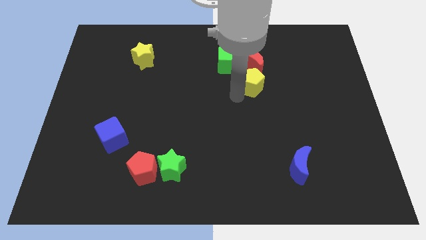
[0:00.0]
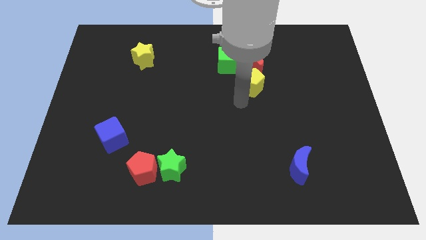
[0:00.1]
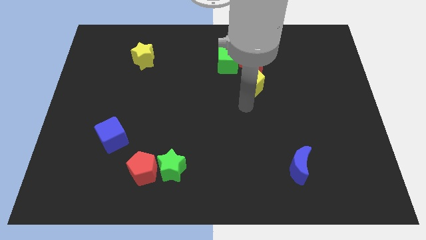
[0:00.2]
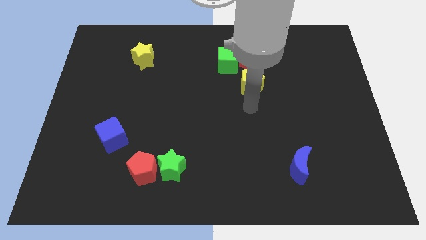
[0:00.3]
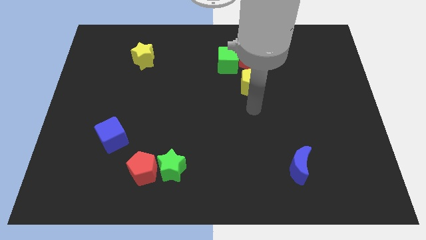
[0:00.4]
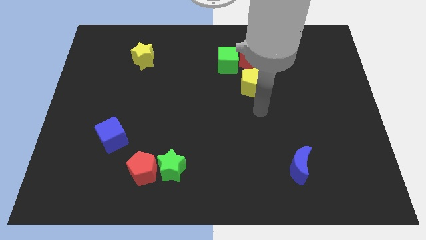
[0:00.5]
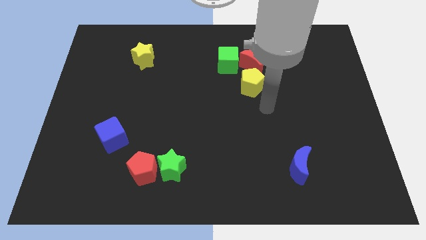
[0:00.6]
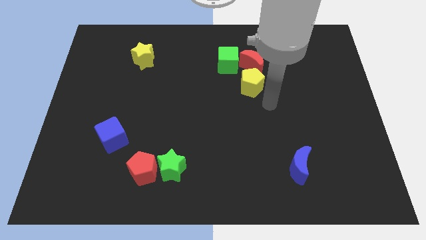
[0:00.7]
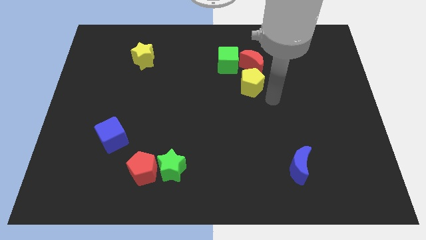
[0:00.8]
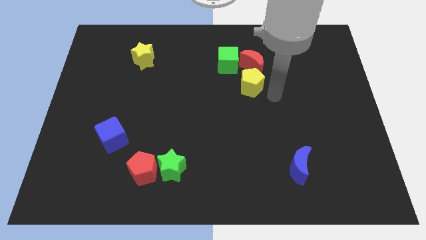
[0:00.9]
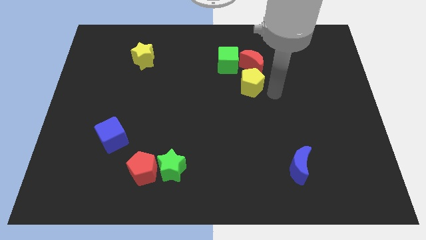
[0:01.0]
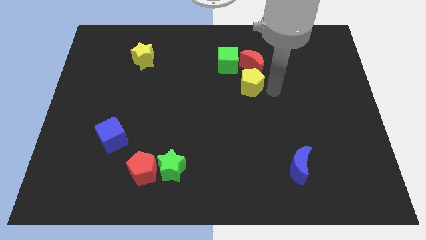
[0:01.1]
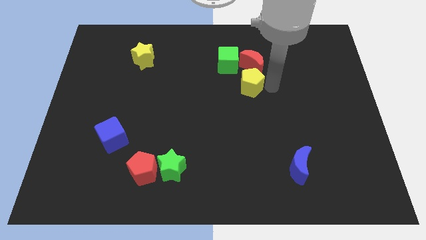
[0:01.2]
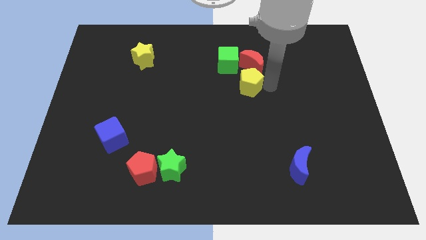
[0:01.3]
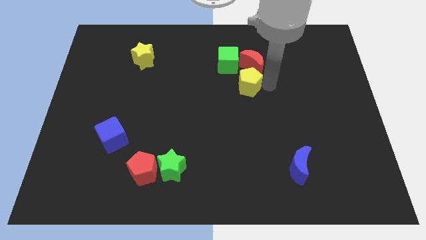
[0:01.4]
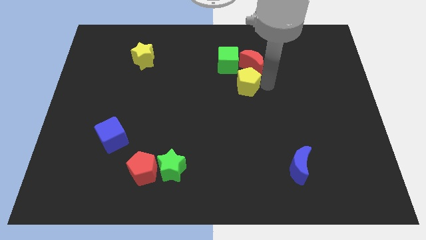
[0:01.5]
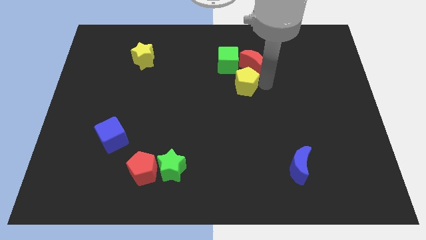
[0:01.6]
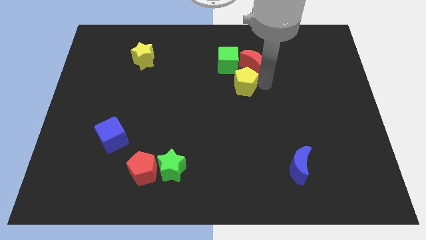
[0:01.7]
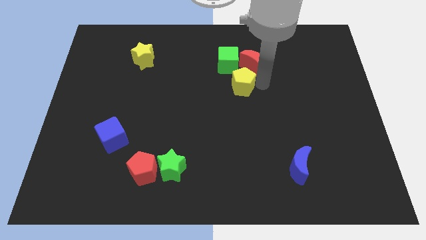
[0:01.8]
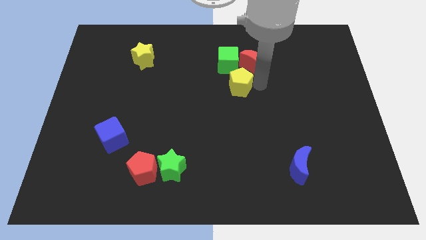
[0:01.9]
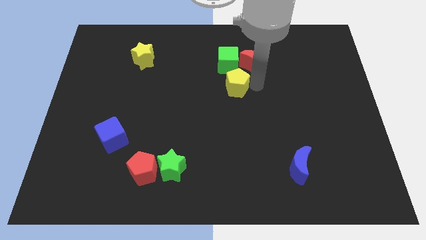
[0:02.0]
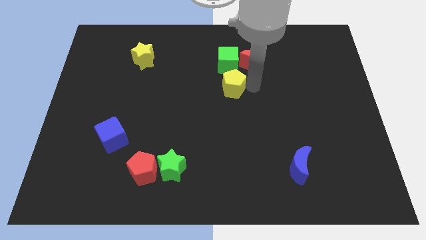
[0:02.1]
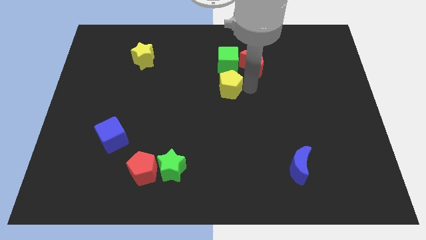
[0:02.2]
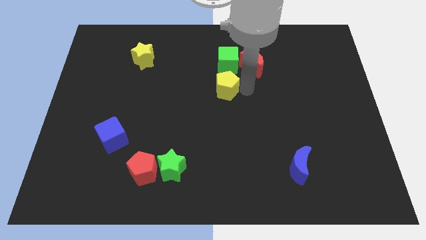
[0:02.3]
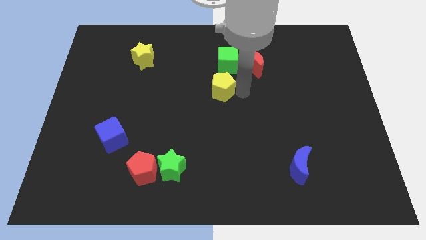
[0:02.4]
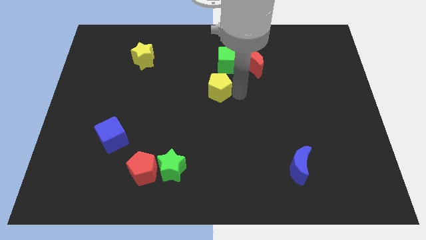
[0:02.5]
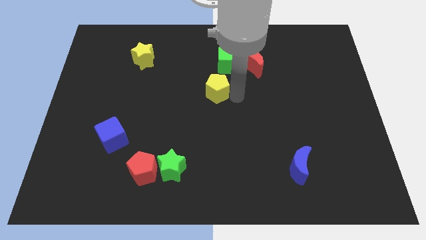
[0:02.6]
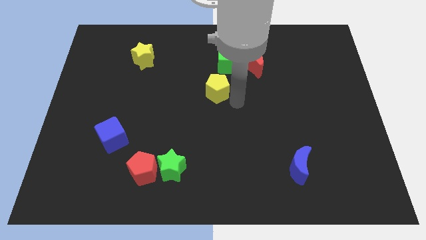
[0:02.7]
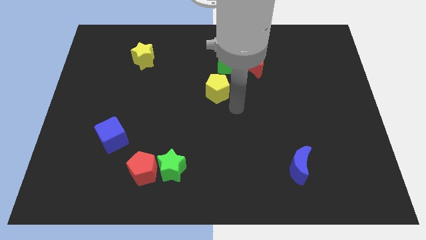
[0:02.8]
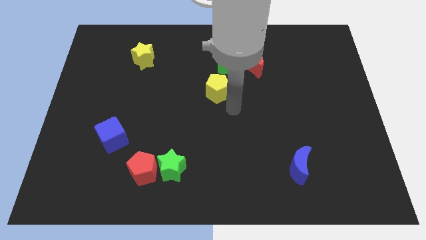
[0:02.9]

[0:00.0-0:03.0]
slide the yellow pentagon away from the red moon

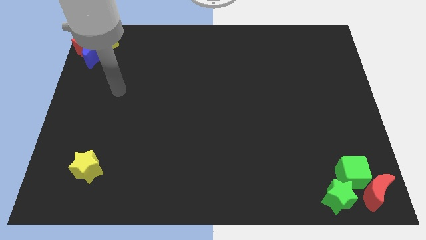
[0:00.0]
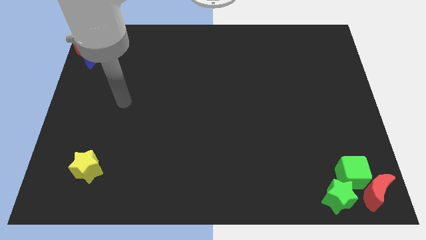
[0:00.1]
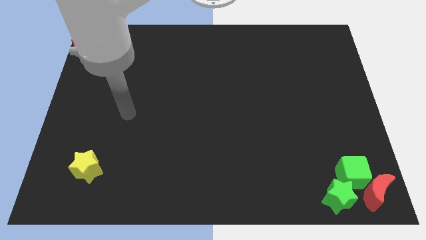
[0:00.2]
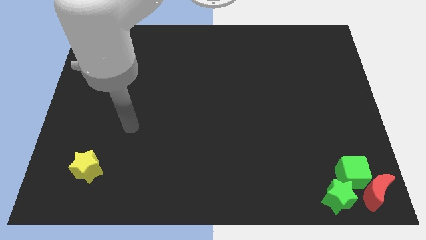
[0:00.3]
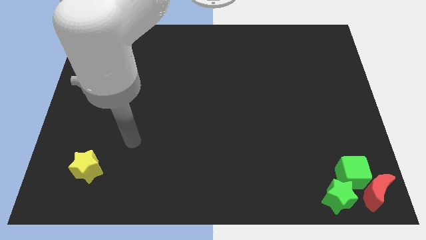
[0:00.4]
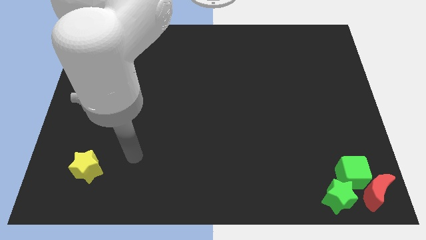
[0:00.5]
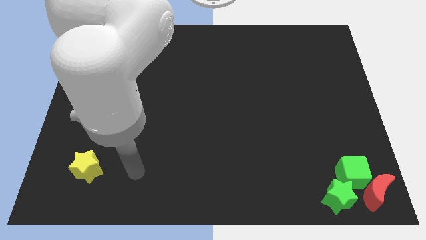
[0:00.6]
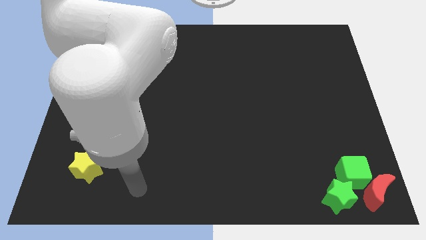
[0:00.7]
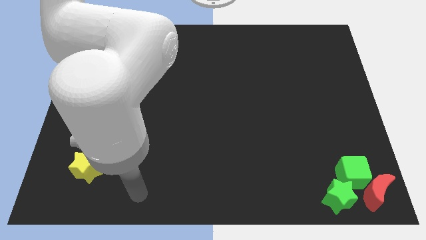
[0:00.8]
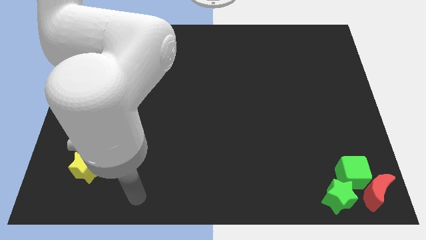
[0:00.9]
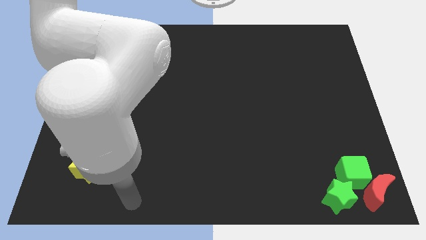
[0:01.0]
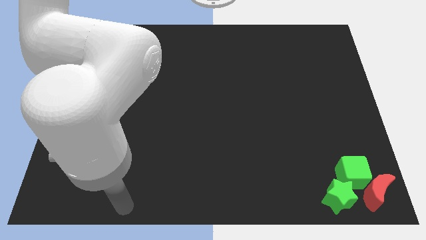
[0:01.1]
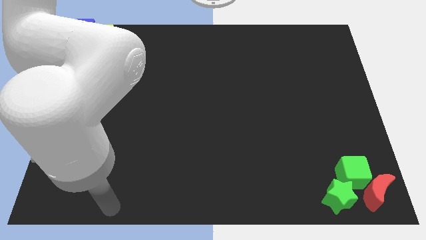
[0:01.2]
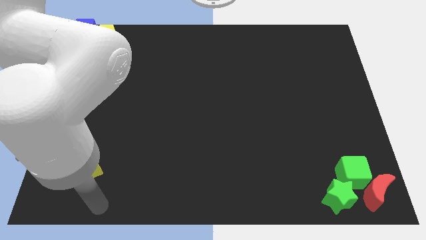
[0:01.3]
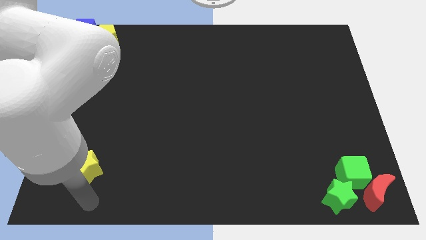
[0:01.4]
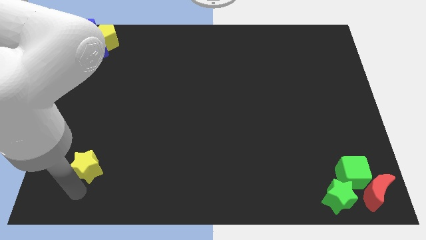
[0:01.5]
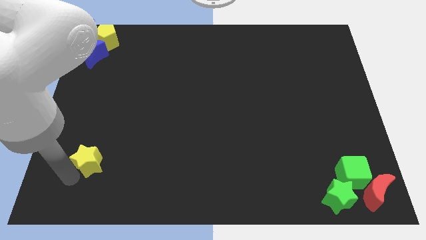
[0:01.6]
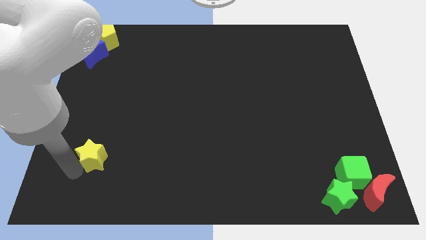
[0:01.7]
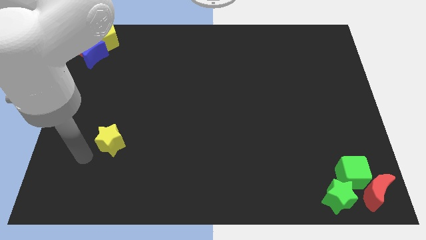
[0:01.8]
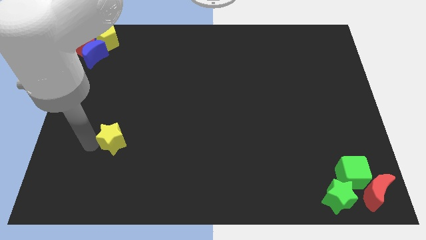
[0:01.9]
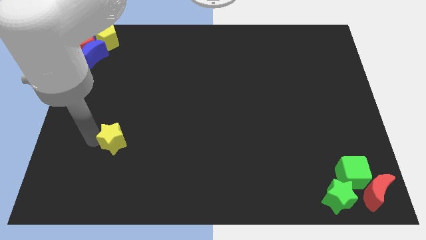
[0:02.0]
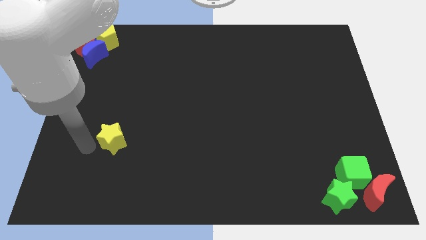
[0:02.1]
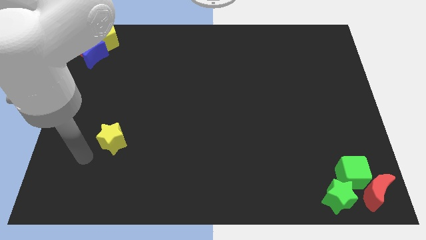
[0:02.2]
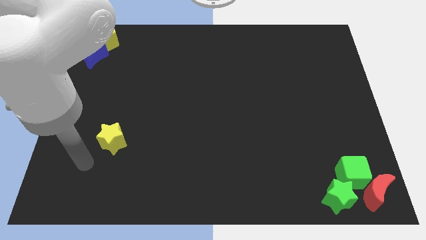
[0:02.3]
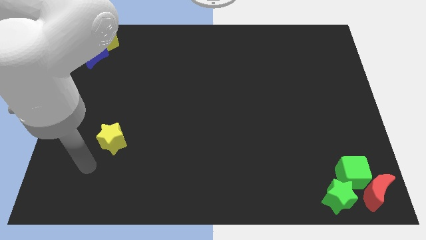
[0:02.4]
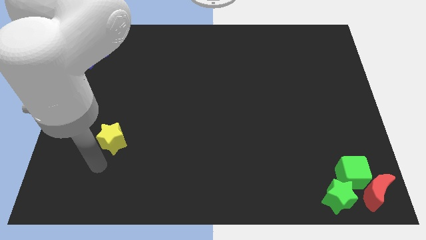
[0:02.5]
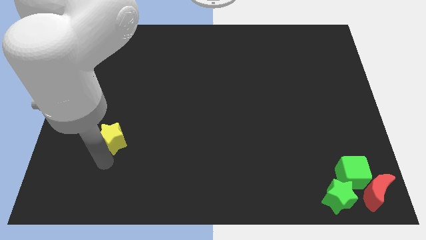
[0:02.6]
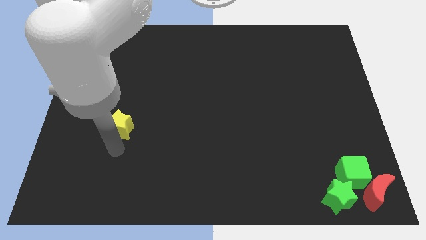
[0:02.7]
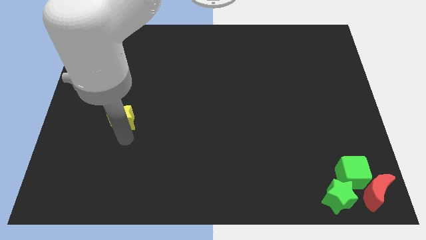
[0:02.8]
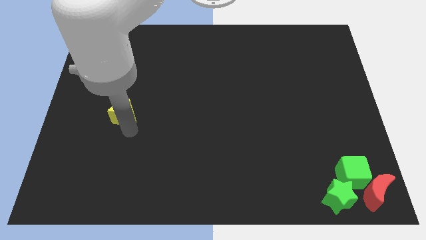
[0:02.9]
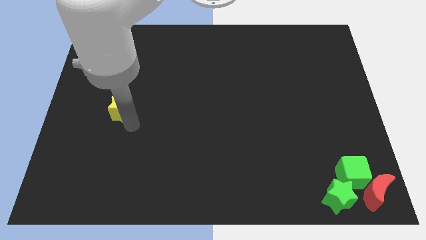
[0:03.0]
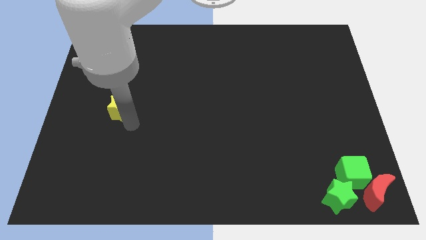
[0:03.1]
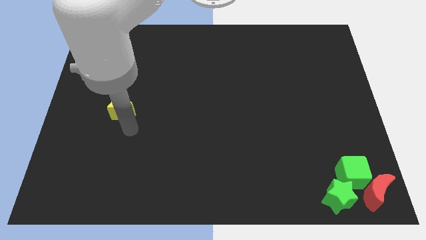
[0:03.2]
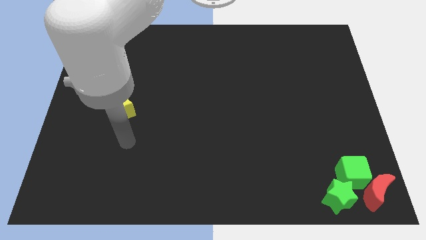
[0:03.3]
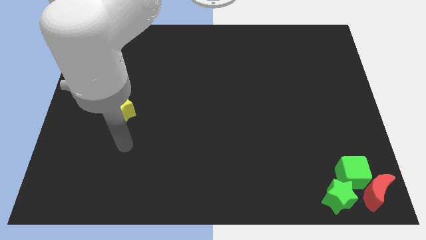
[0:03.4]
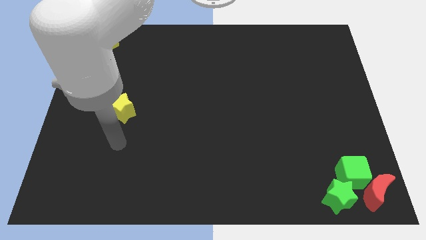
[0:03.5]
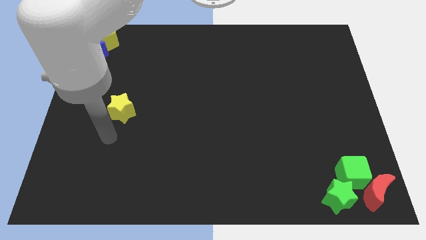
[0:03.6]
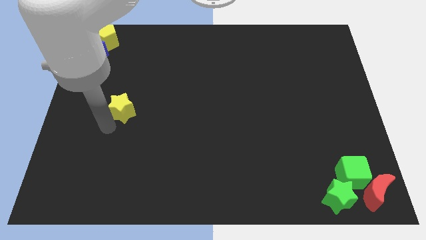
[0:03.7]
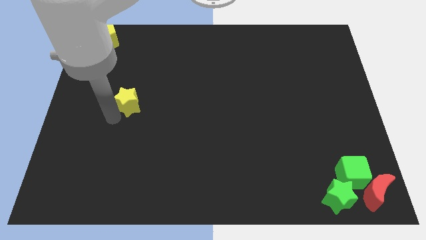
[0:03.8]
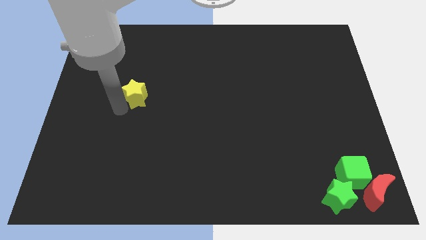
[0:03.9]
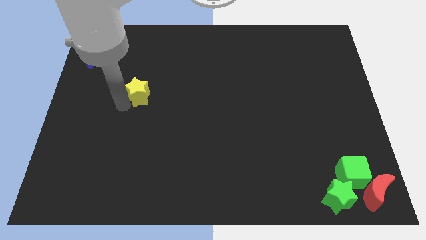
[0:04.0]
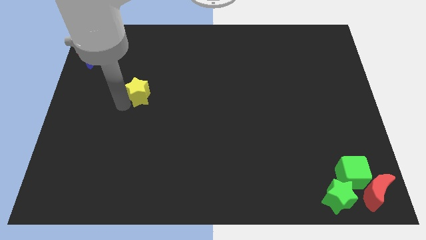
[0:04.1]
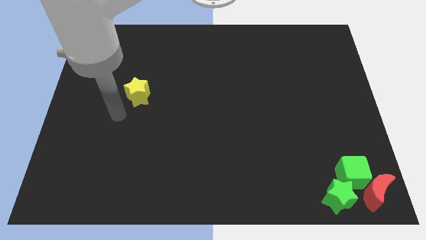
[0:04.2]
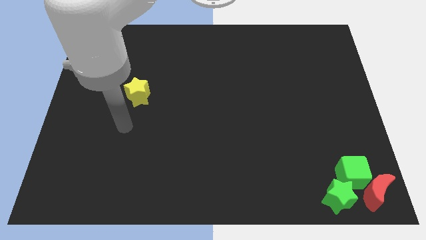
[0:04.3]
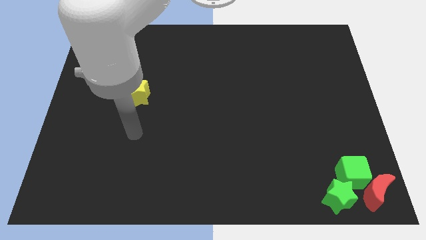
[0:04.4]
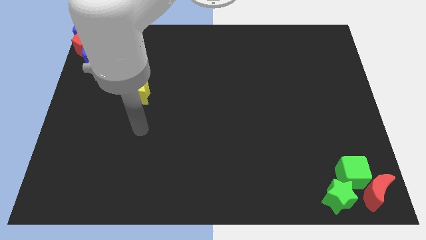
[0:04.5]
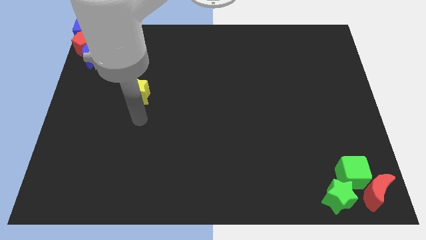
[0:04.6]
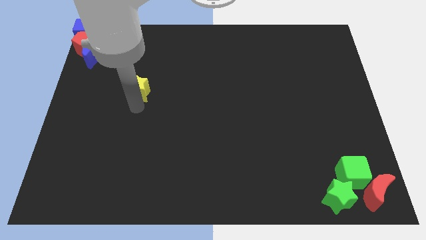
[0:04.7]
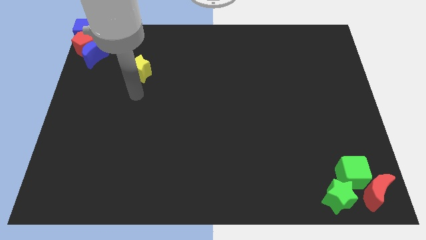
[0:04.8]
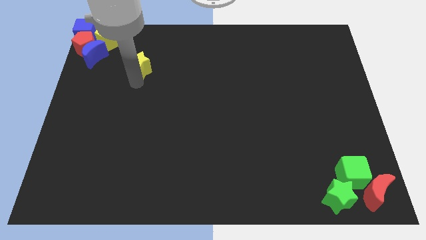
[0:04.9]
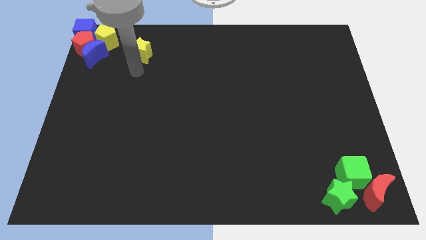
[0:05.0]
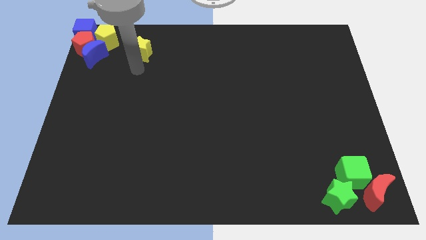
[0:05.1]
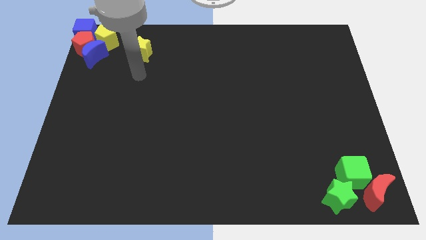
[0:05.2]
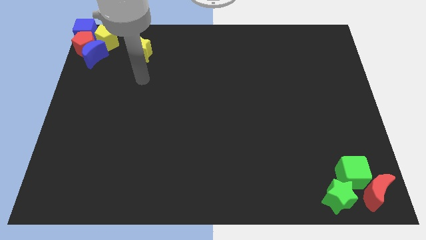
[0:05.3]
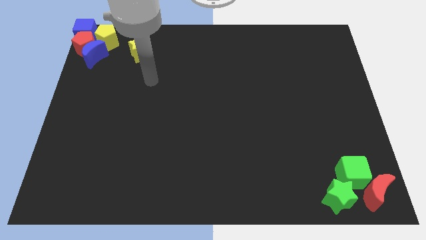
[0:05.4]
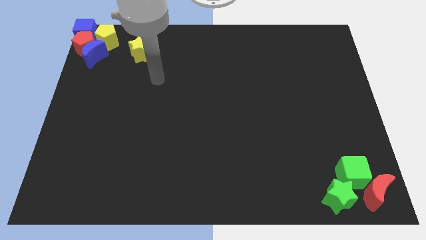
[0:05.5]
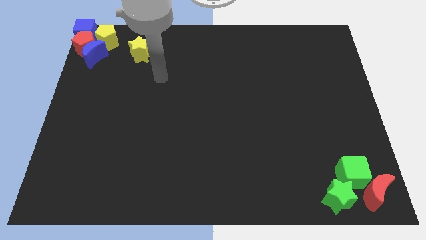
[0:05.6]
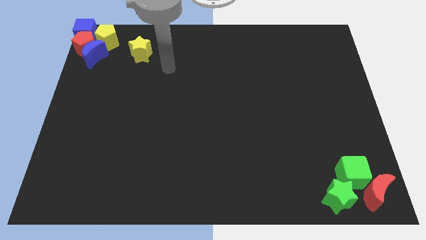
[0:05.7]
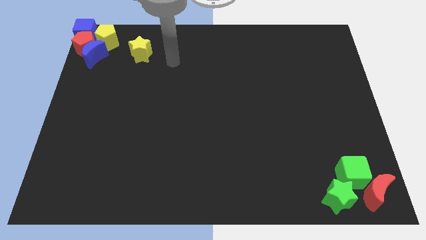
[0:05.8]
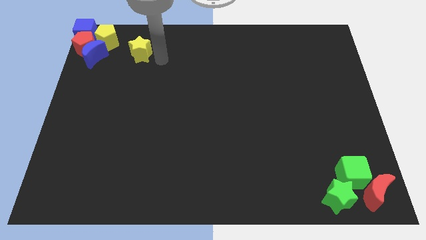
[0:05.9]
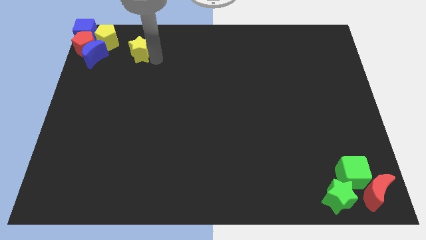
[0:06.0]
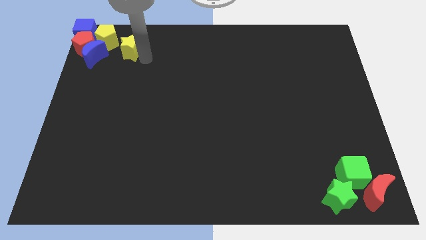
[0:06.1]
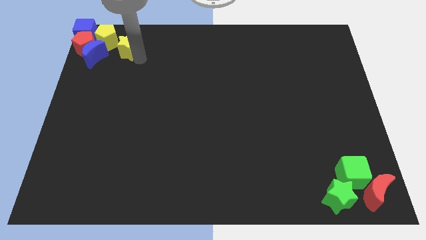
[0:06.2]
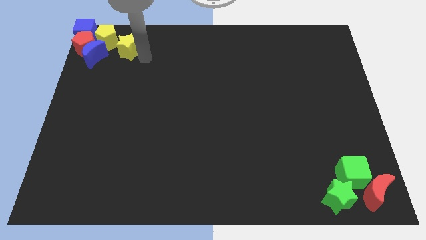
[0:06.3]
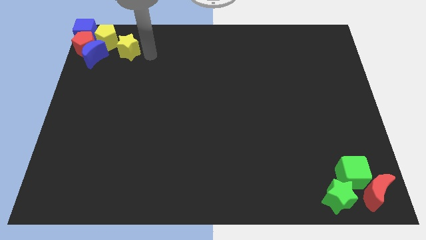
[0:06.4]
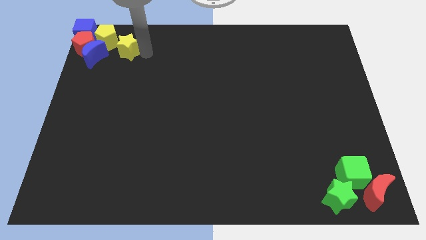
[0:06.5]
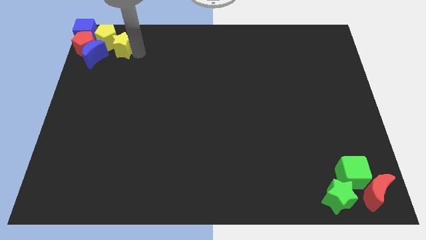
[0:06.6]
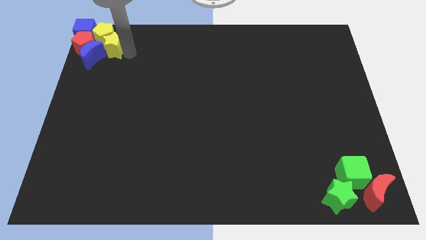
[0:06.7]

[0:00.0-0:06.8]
move the yellow star to the bottom right of the yellow pentagon
